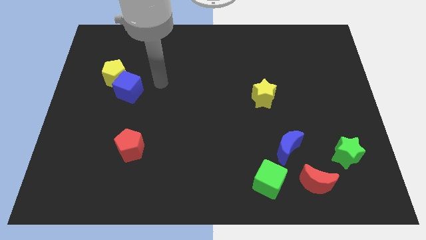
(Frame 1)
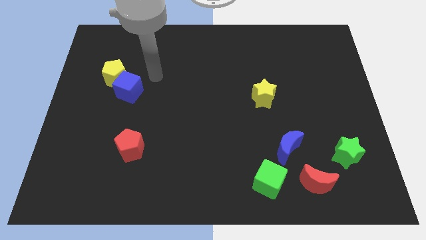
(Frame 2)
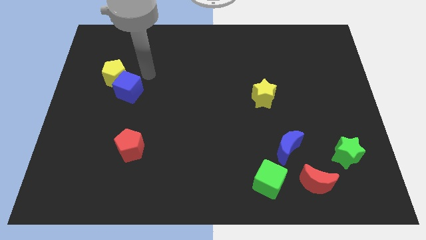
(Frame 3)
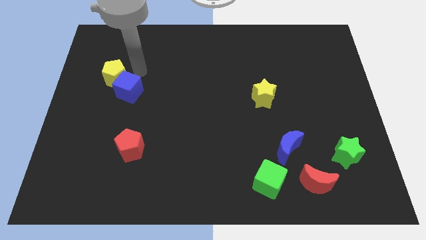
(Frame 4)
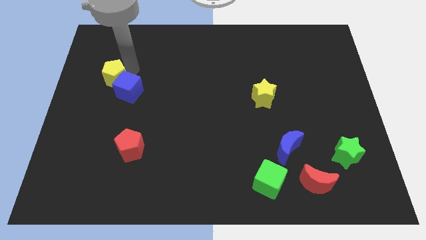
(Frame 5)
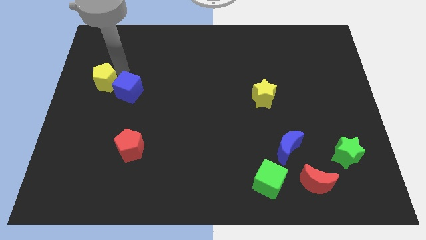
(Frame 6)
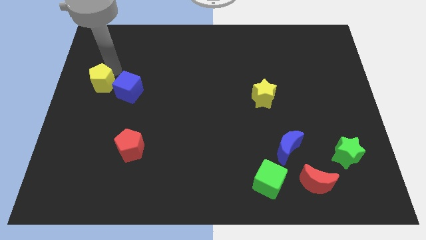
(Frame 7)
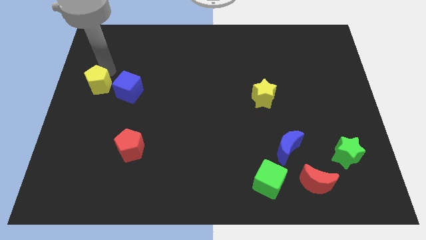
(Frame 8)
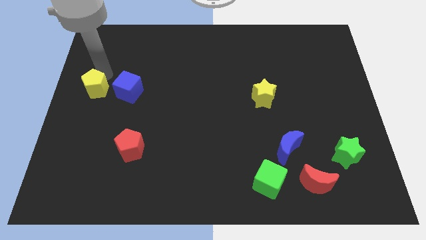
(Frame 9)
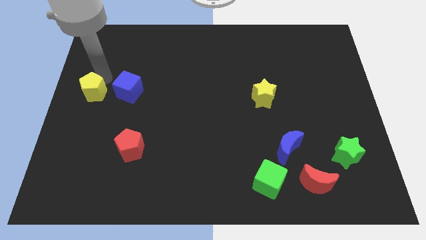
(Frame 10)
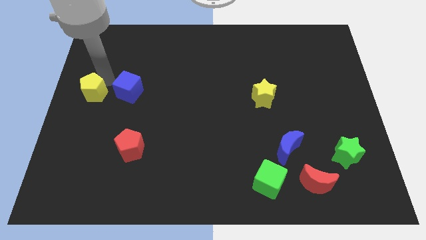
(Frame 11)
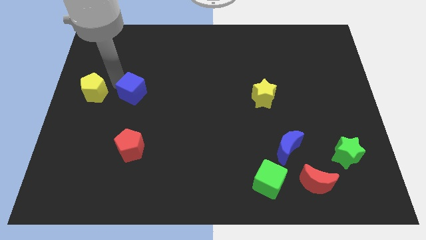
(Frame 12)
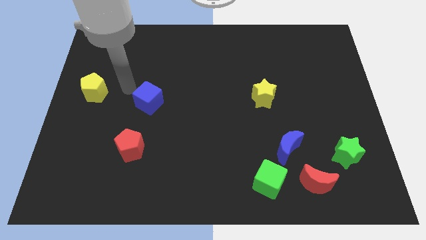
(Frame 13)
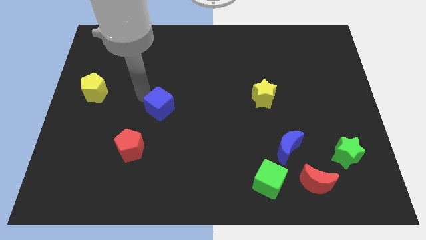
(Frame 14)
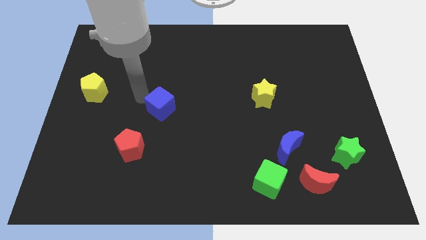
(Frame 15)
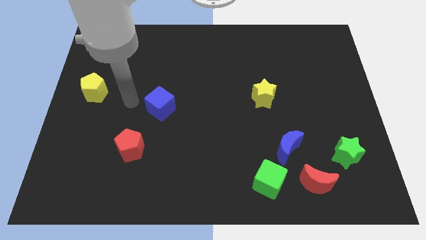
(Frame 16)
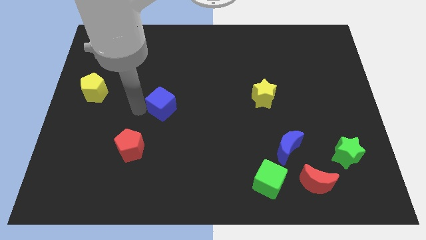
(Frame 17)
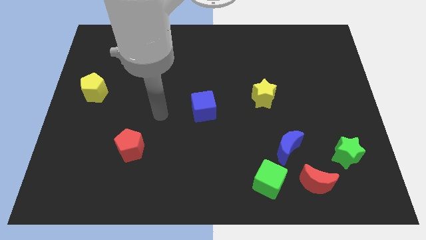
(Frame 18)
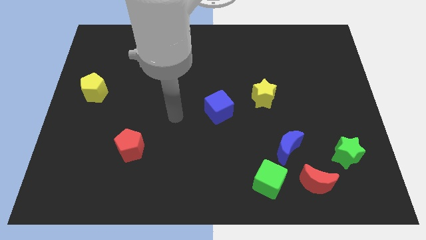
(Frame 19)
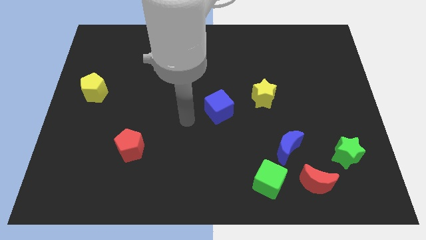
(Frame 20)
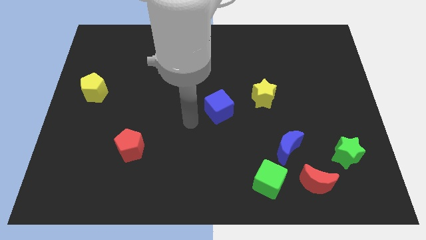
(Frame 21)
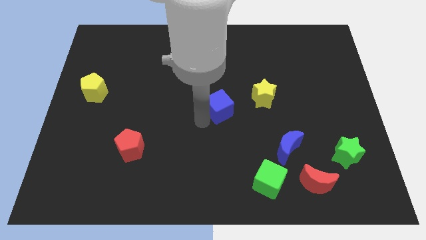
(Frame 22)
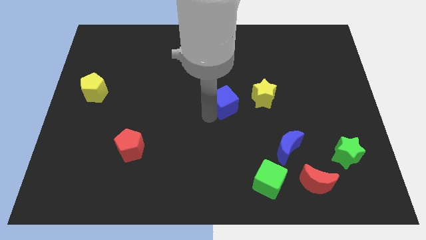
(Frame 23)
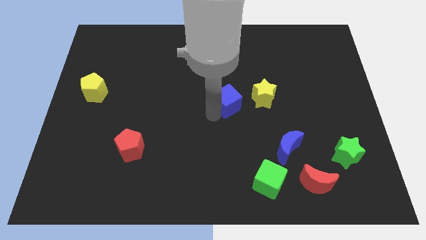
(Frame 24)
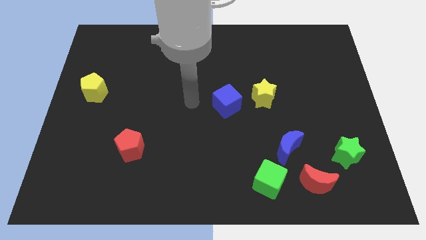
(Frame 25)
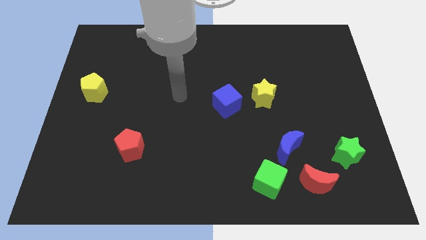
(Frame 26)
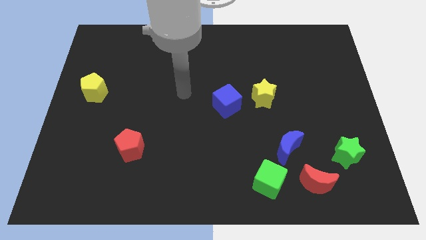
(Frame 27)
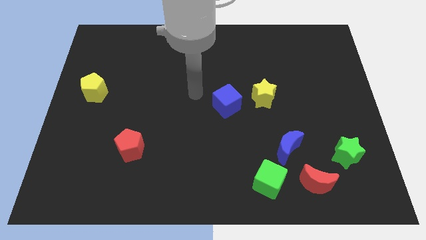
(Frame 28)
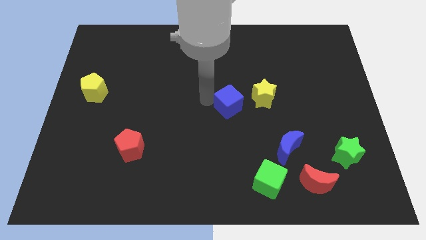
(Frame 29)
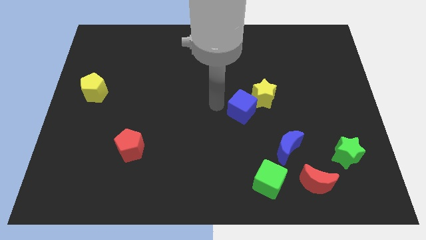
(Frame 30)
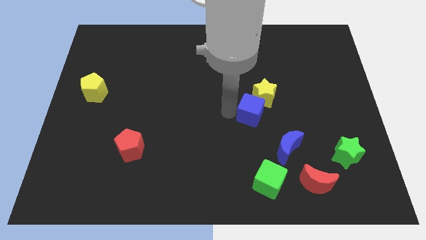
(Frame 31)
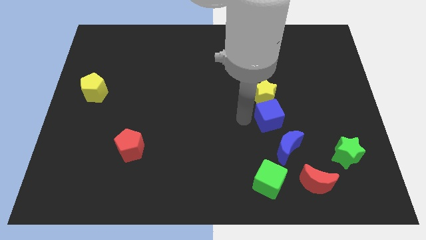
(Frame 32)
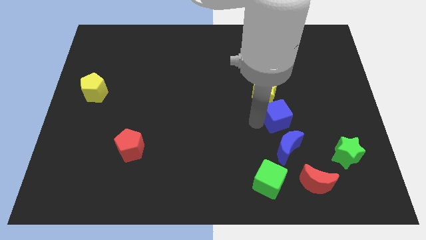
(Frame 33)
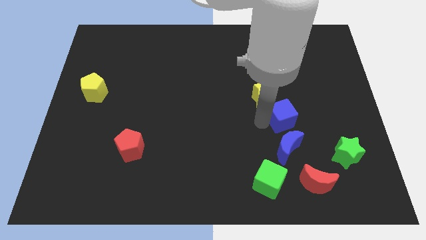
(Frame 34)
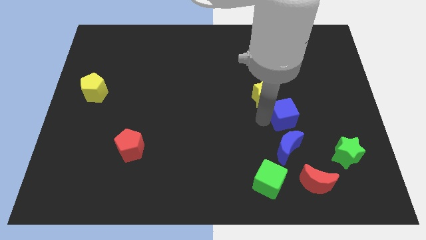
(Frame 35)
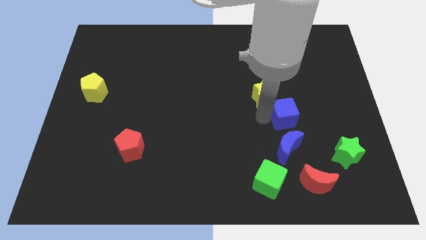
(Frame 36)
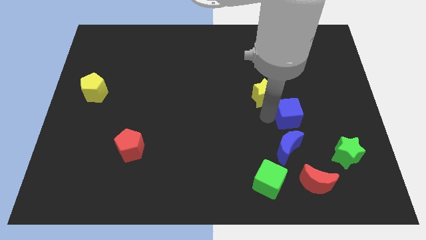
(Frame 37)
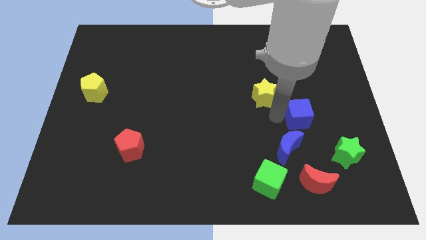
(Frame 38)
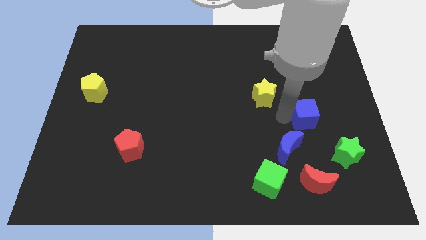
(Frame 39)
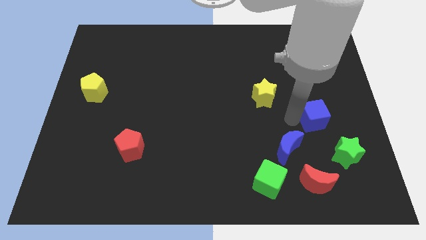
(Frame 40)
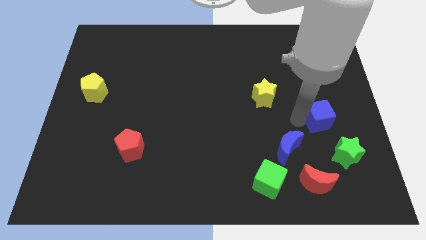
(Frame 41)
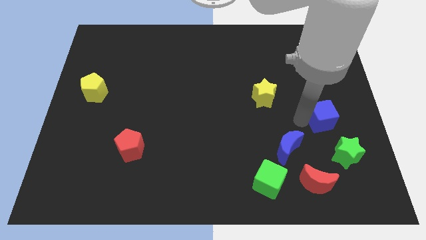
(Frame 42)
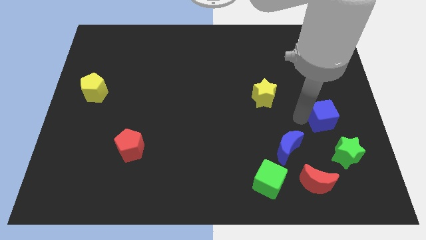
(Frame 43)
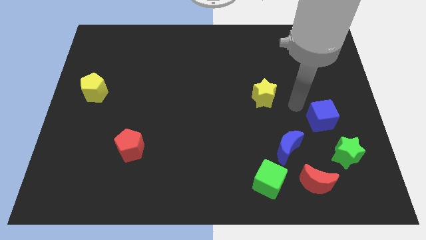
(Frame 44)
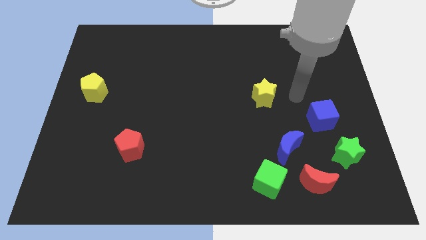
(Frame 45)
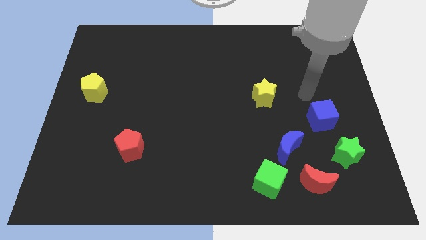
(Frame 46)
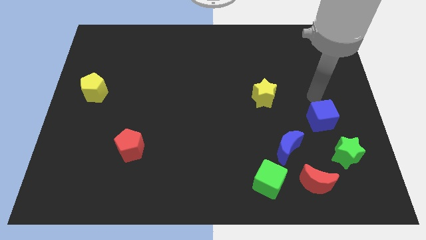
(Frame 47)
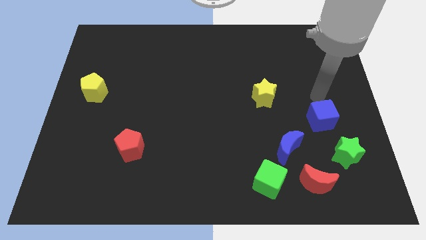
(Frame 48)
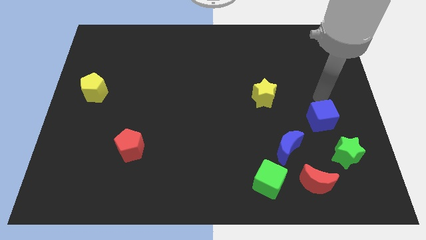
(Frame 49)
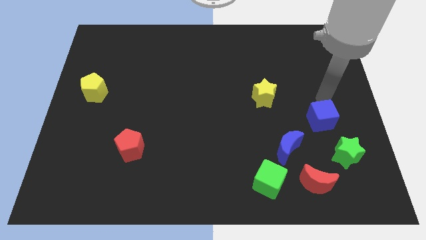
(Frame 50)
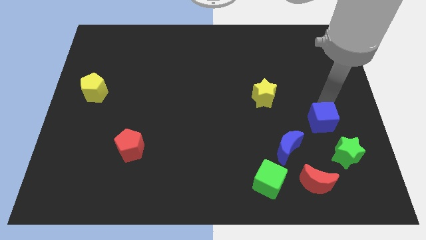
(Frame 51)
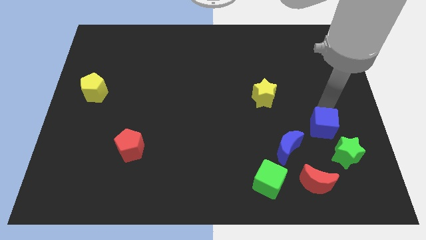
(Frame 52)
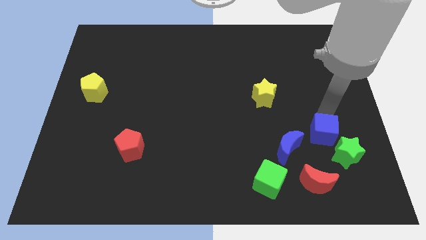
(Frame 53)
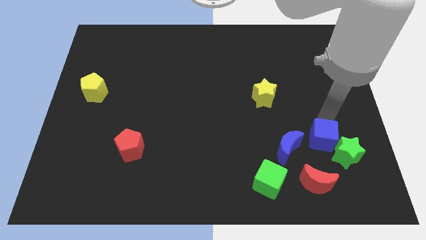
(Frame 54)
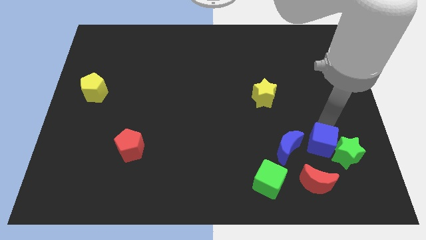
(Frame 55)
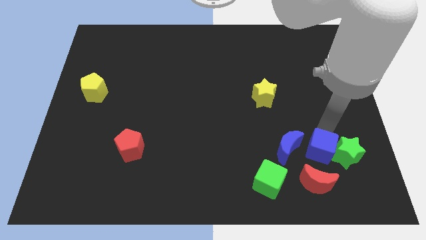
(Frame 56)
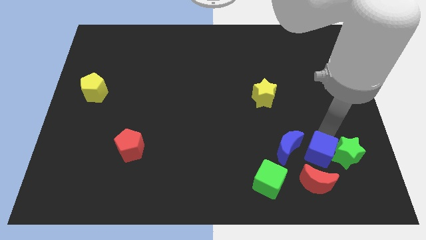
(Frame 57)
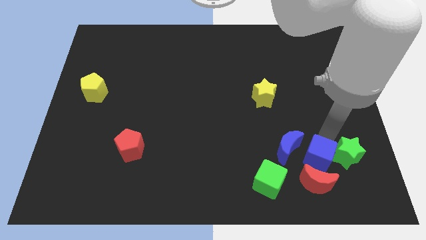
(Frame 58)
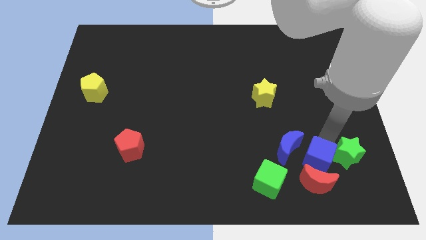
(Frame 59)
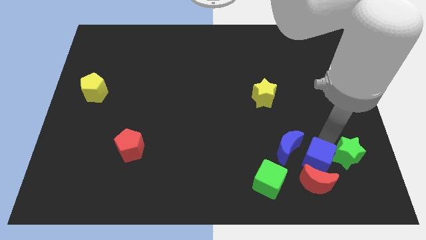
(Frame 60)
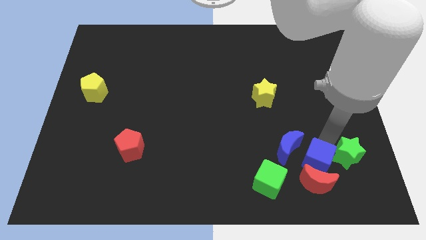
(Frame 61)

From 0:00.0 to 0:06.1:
slide the blue cube to the red moon

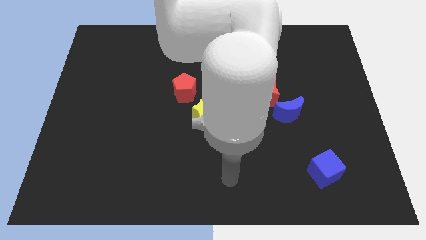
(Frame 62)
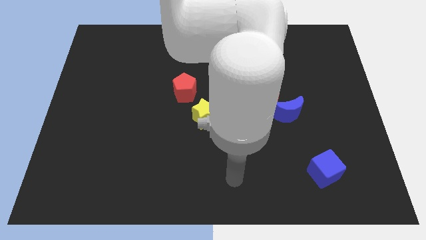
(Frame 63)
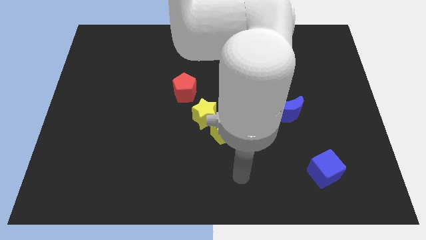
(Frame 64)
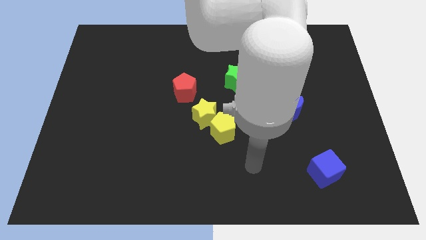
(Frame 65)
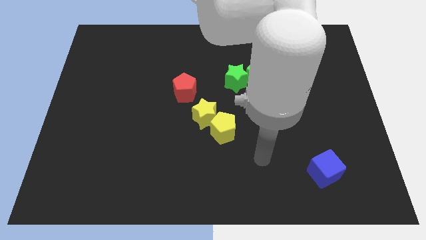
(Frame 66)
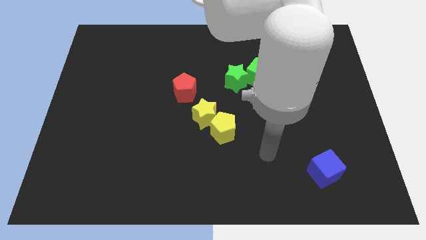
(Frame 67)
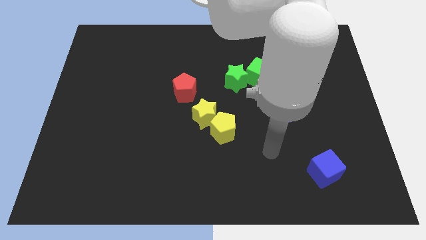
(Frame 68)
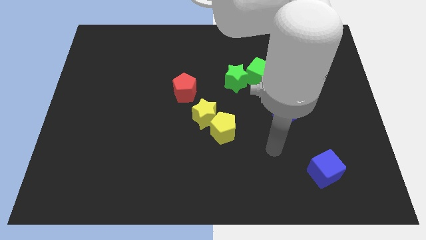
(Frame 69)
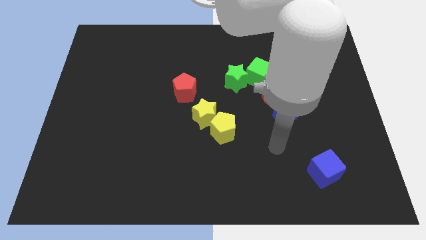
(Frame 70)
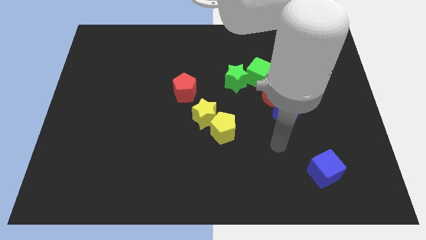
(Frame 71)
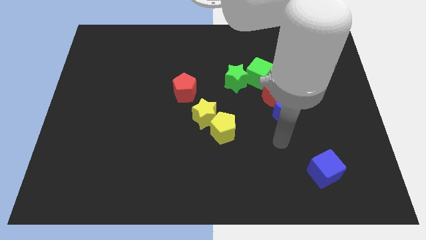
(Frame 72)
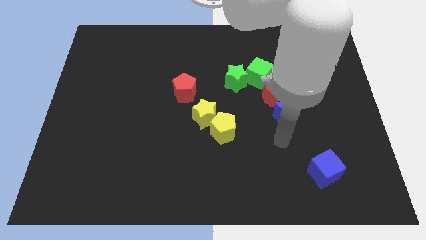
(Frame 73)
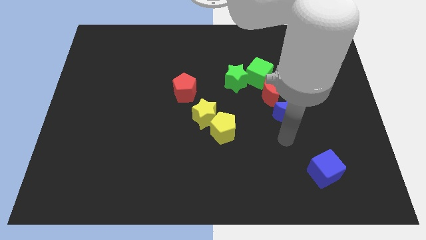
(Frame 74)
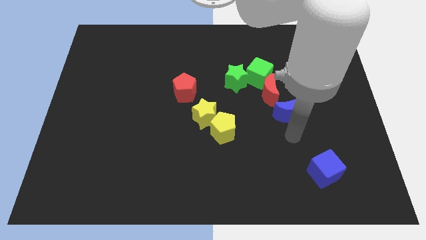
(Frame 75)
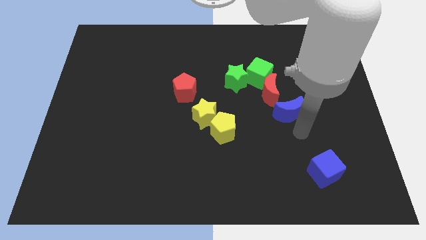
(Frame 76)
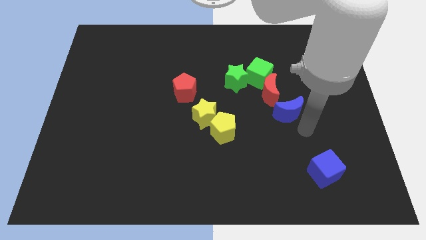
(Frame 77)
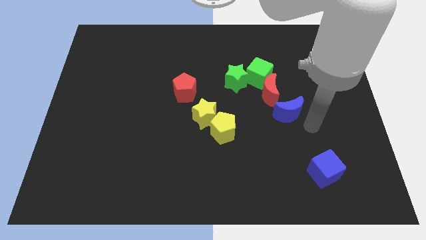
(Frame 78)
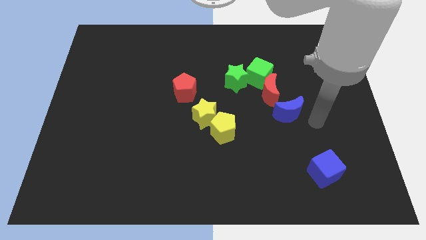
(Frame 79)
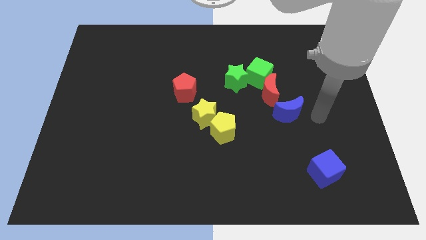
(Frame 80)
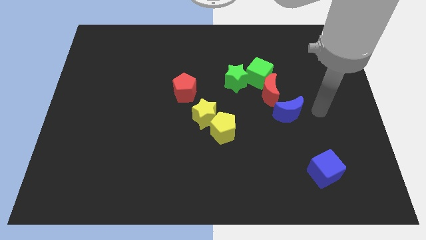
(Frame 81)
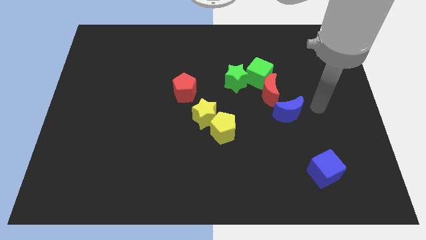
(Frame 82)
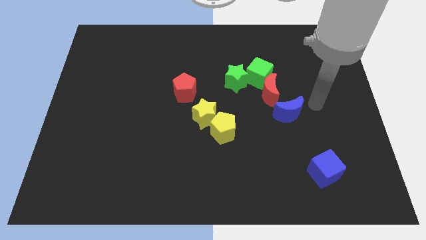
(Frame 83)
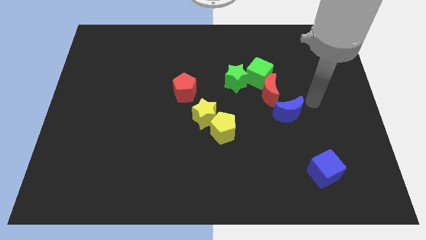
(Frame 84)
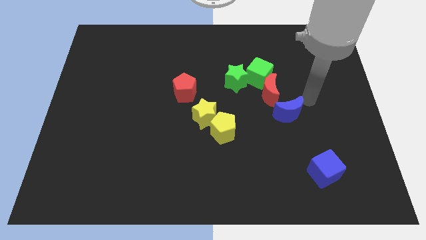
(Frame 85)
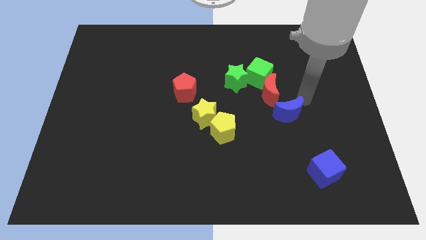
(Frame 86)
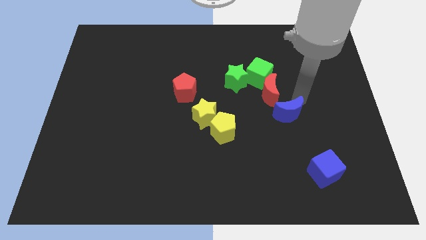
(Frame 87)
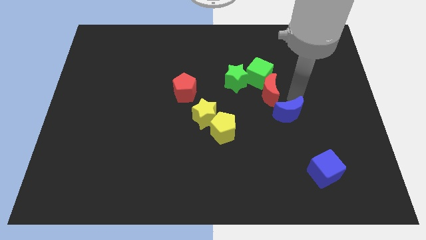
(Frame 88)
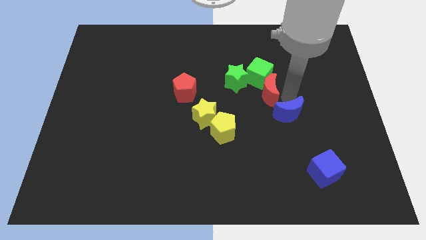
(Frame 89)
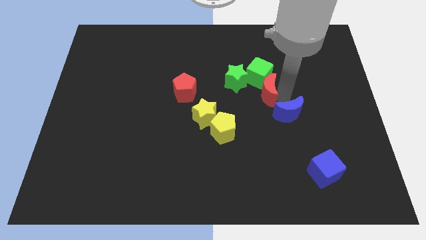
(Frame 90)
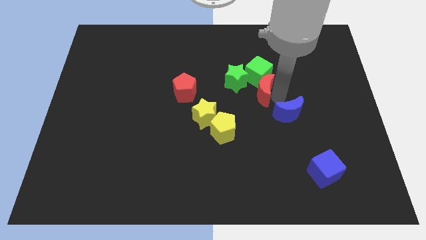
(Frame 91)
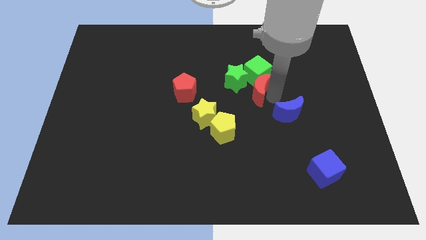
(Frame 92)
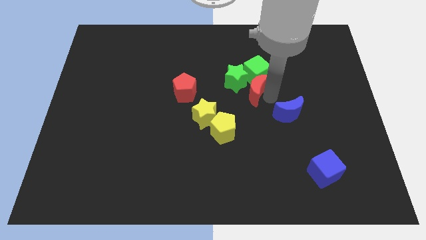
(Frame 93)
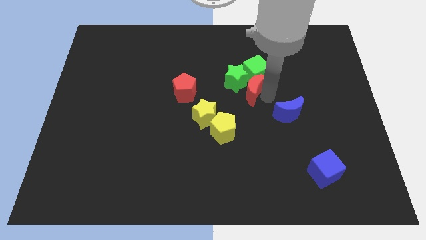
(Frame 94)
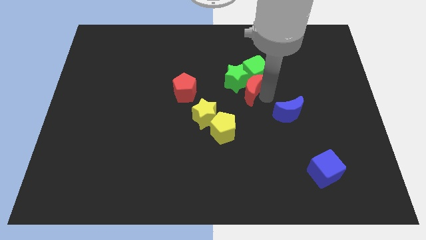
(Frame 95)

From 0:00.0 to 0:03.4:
slide the red moon towards the green star
